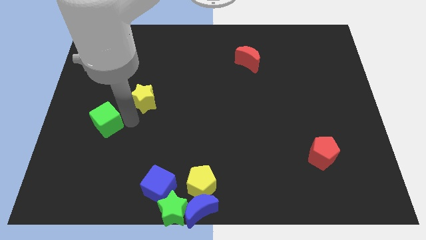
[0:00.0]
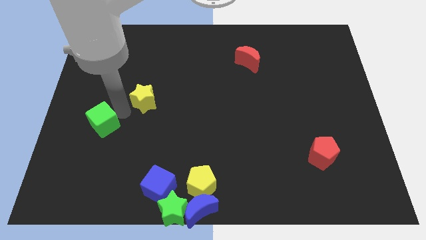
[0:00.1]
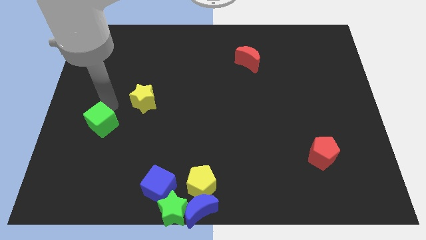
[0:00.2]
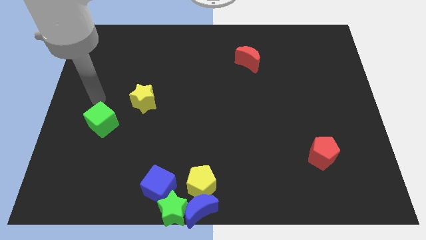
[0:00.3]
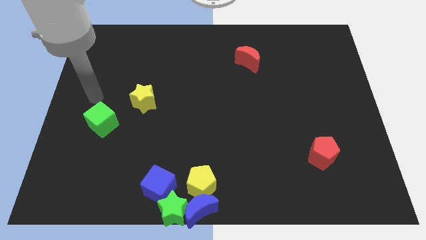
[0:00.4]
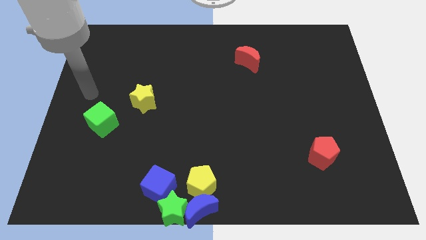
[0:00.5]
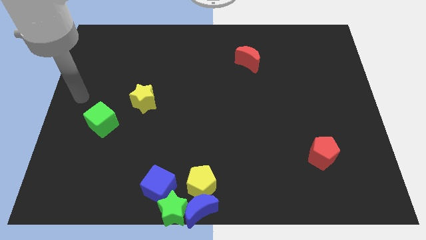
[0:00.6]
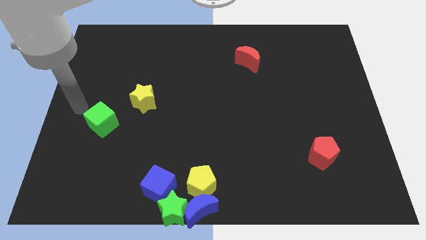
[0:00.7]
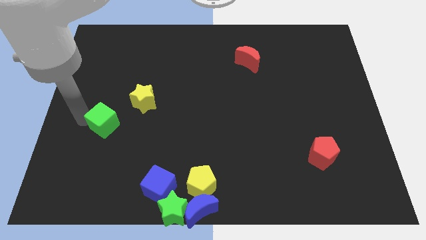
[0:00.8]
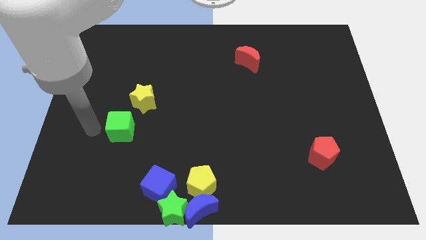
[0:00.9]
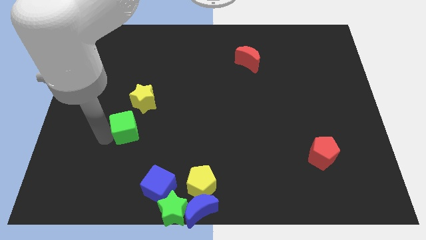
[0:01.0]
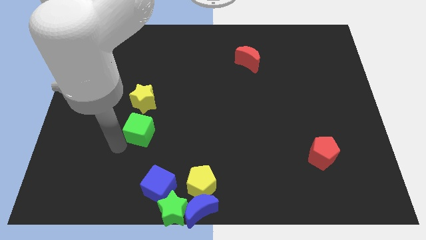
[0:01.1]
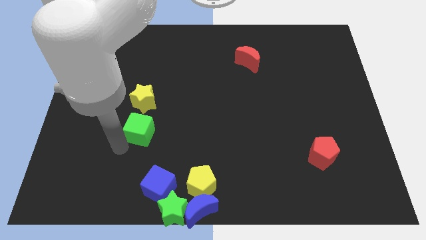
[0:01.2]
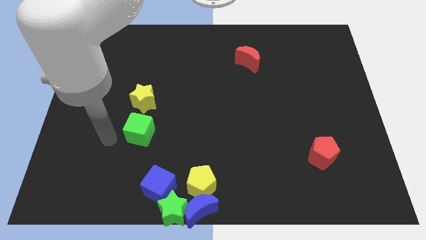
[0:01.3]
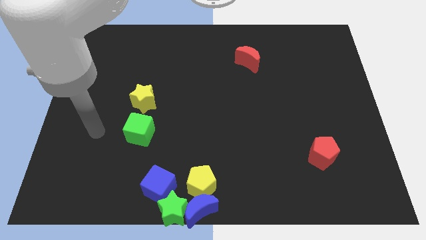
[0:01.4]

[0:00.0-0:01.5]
push the green cube to the bottom of the yellow star

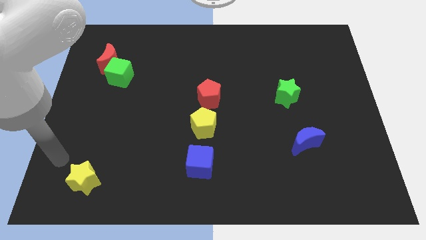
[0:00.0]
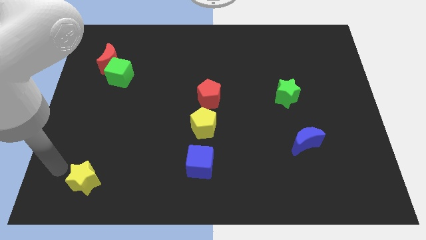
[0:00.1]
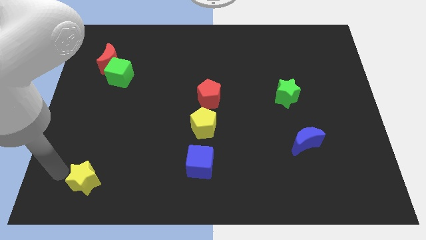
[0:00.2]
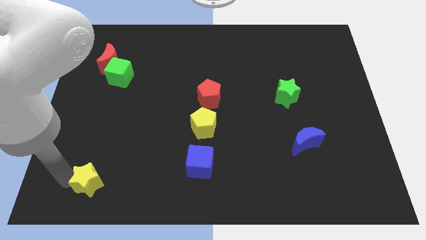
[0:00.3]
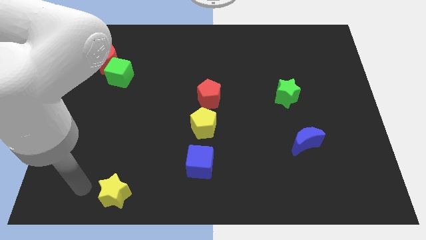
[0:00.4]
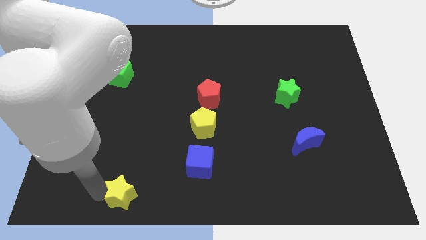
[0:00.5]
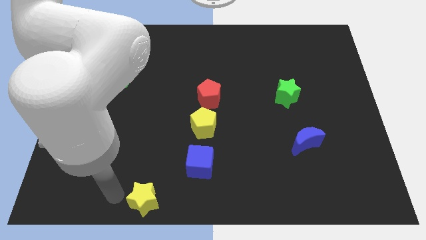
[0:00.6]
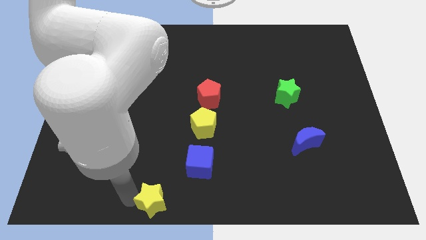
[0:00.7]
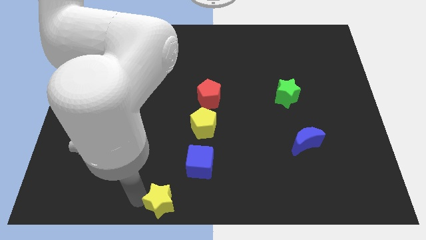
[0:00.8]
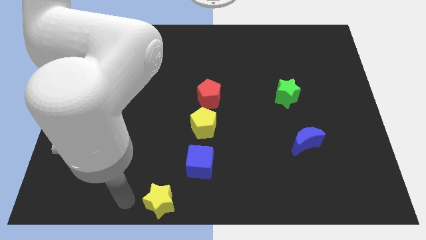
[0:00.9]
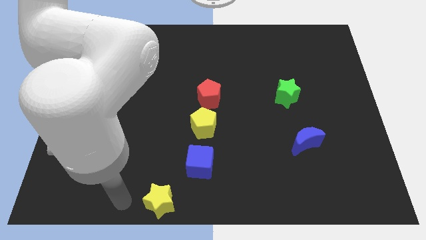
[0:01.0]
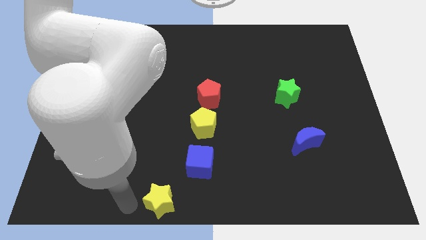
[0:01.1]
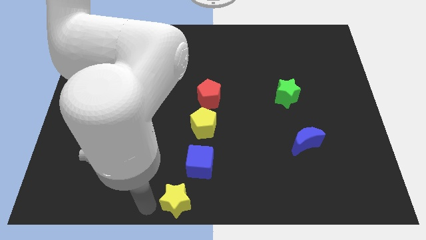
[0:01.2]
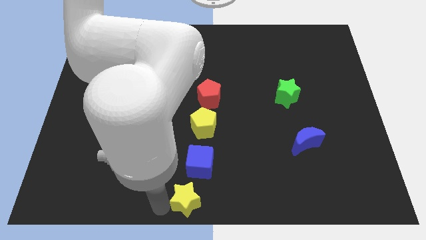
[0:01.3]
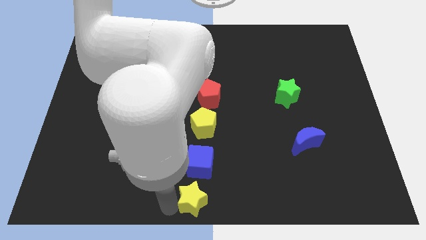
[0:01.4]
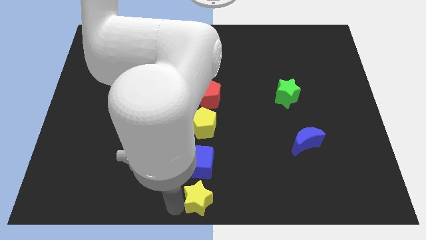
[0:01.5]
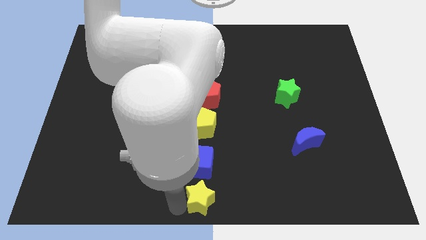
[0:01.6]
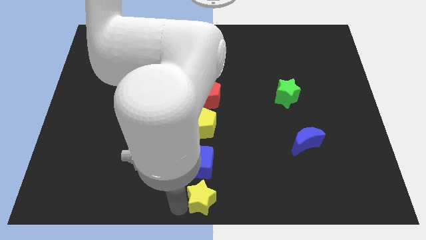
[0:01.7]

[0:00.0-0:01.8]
place the yellow star to the bottom center of the board

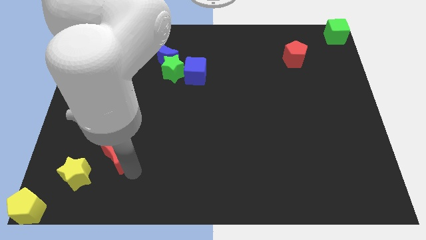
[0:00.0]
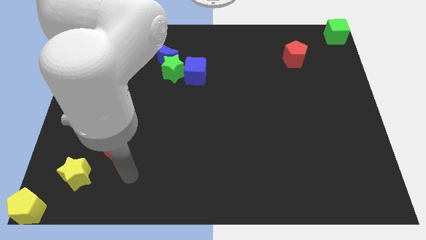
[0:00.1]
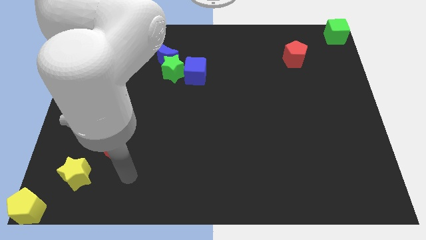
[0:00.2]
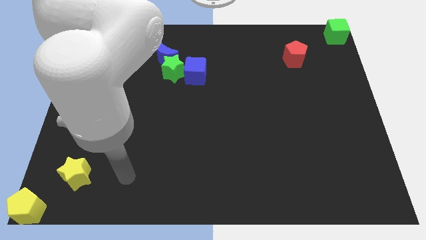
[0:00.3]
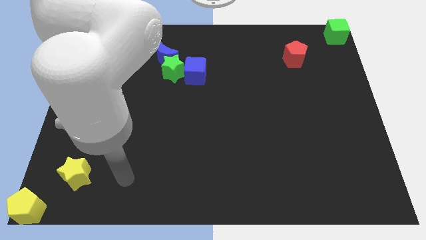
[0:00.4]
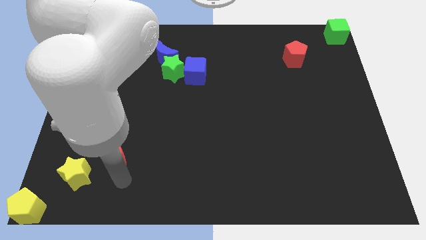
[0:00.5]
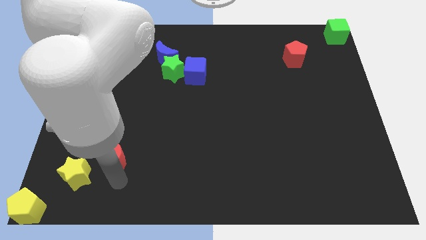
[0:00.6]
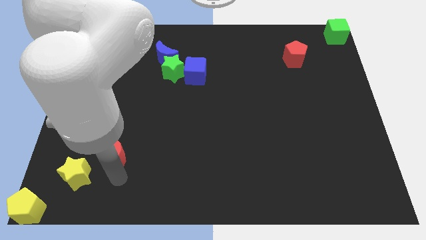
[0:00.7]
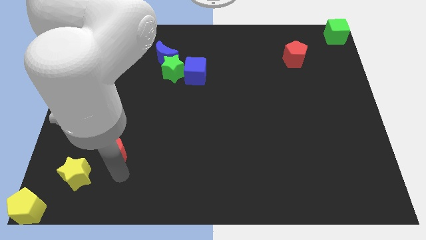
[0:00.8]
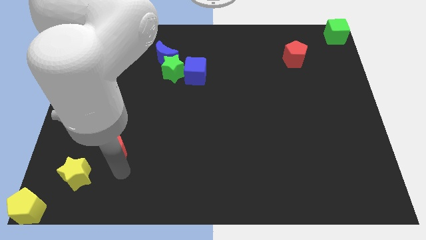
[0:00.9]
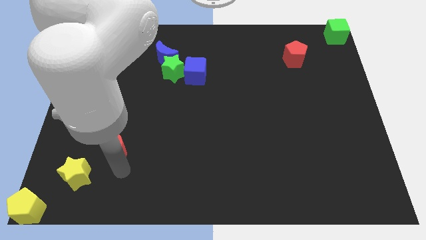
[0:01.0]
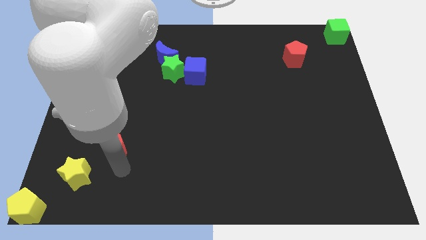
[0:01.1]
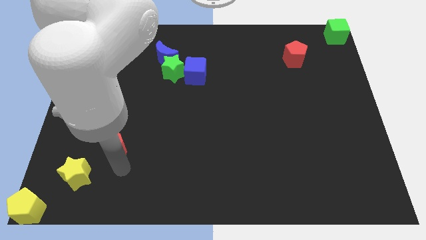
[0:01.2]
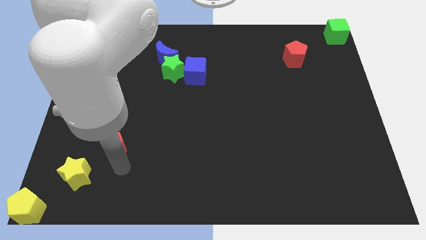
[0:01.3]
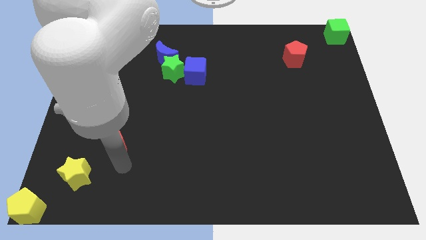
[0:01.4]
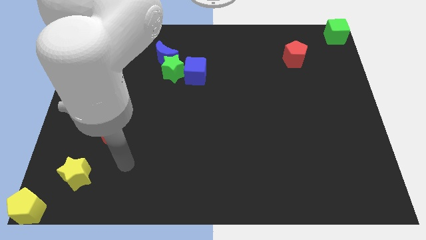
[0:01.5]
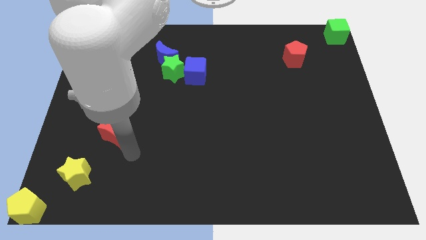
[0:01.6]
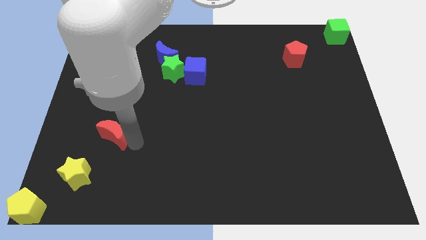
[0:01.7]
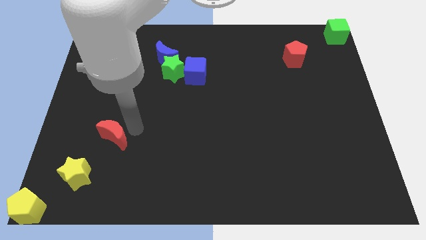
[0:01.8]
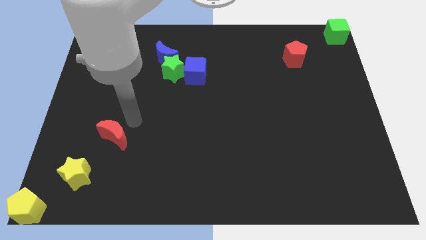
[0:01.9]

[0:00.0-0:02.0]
push the red moon slightly upward

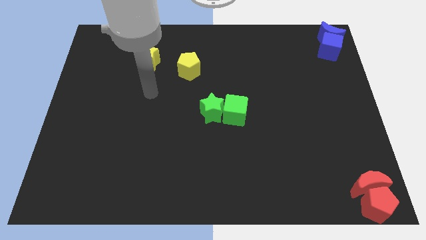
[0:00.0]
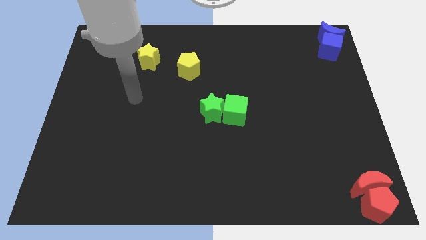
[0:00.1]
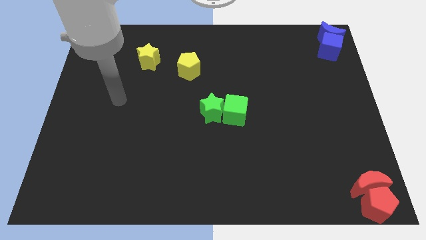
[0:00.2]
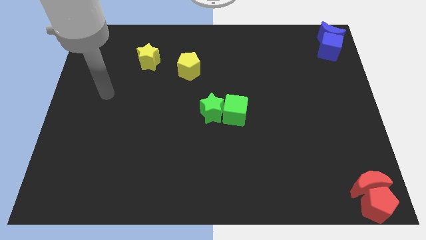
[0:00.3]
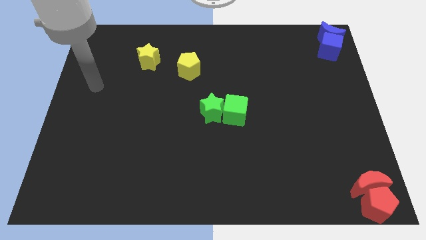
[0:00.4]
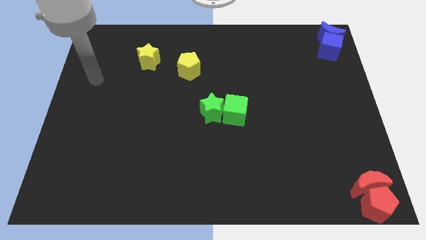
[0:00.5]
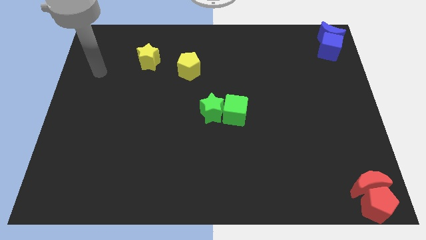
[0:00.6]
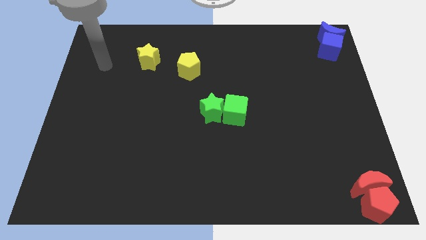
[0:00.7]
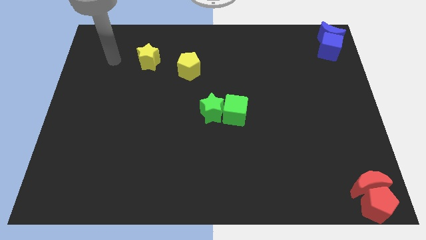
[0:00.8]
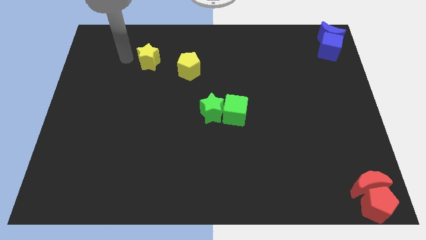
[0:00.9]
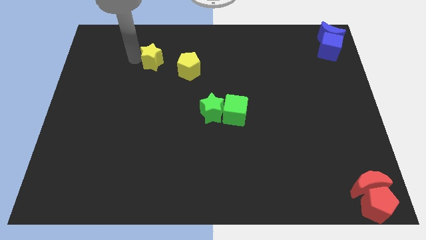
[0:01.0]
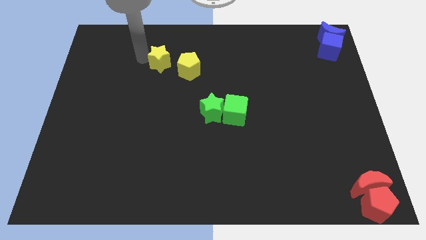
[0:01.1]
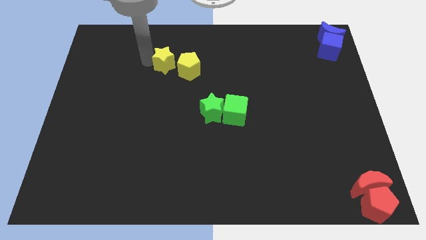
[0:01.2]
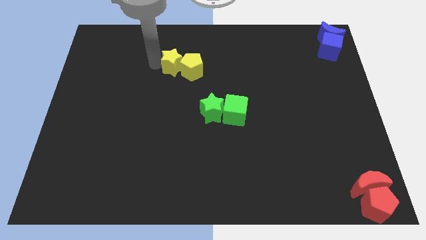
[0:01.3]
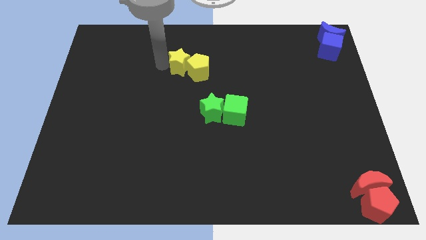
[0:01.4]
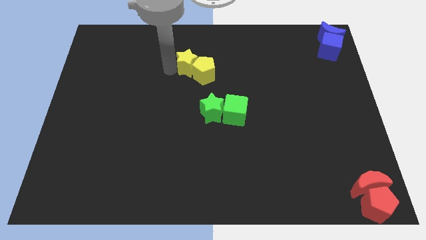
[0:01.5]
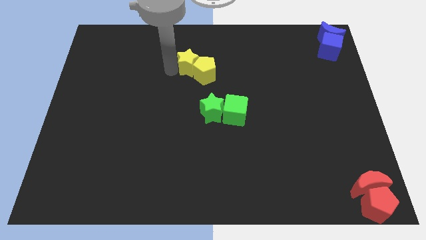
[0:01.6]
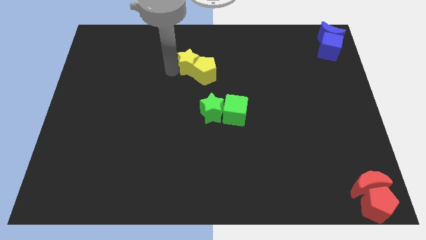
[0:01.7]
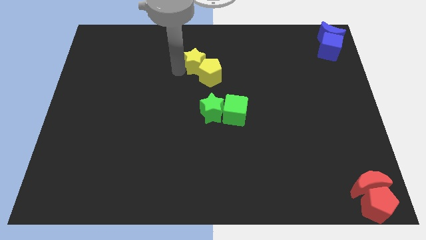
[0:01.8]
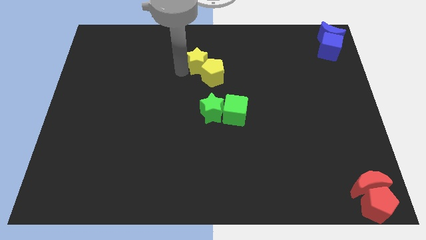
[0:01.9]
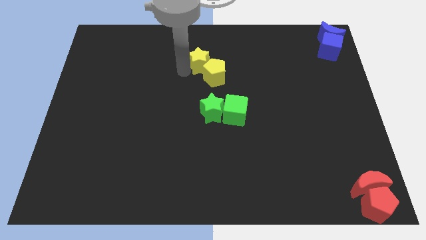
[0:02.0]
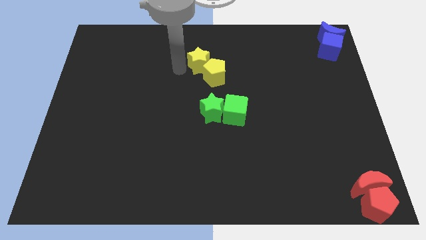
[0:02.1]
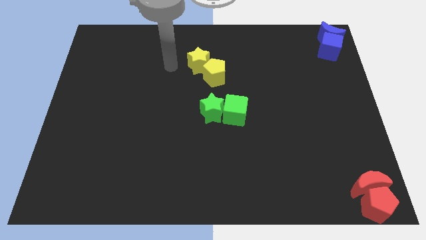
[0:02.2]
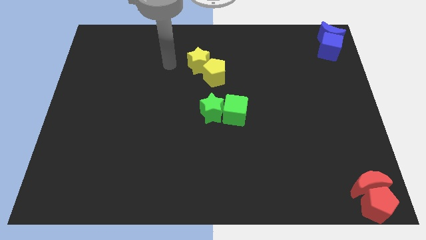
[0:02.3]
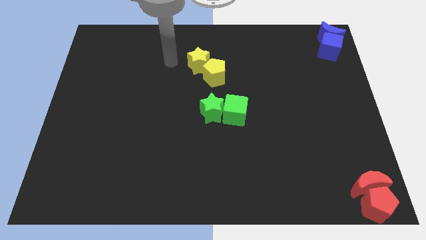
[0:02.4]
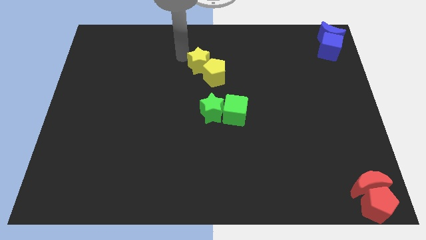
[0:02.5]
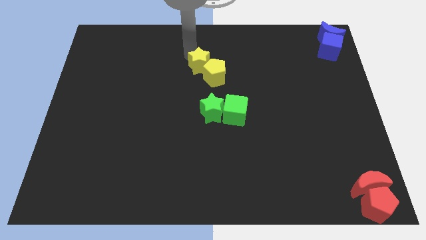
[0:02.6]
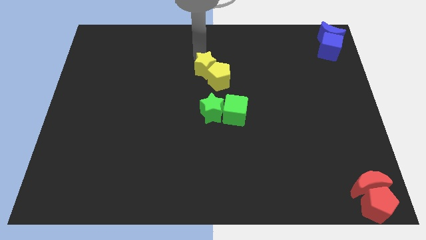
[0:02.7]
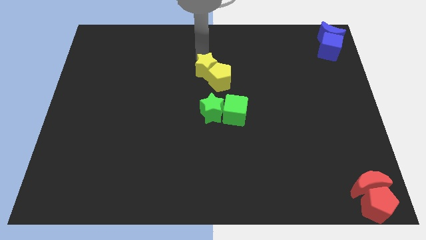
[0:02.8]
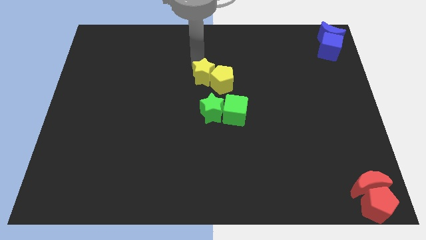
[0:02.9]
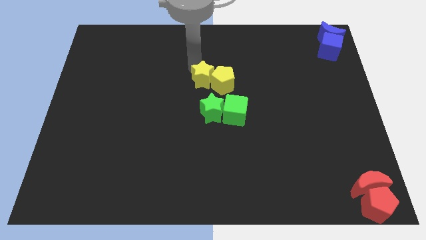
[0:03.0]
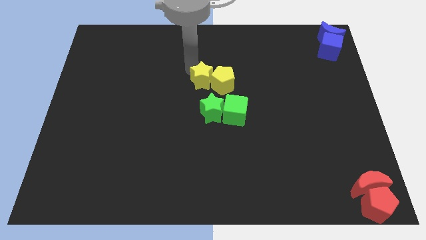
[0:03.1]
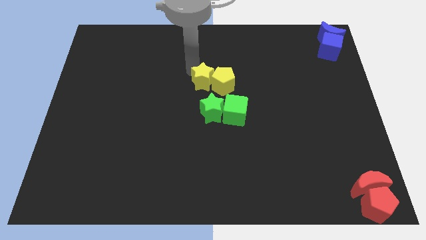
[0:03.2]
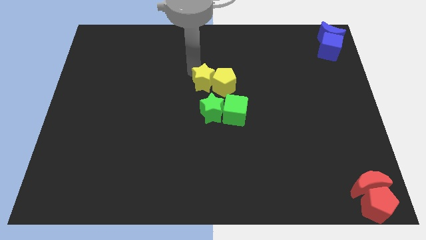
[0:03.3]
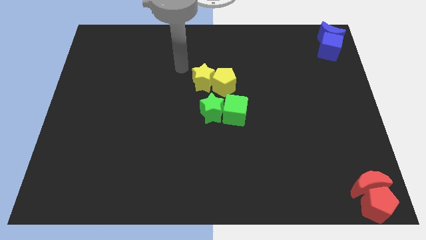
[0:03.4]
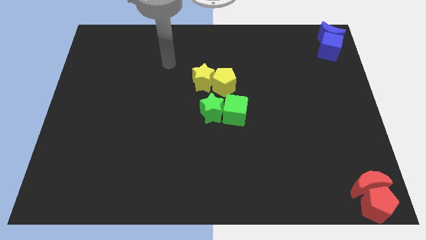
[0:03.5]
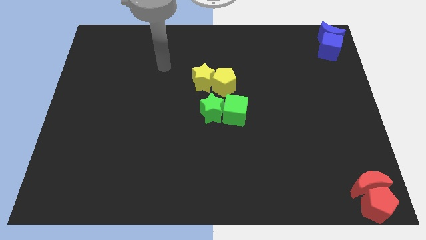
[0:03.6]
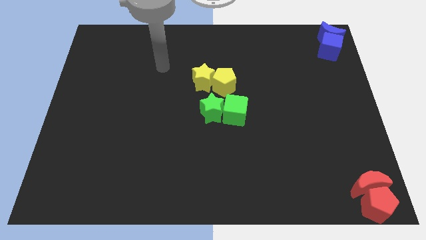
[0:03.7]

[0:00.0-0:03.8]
slide the yellow blocks above the top side of the green blocks
